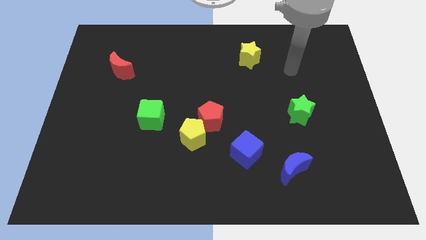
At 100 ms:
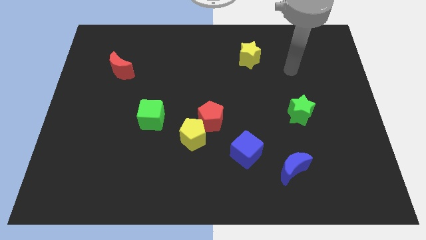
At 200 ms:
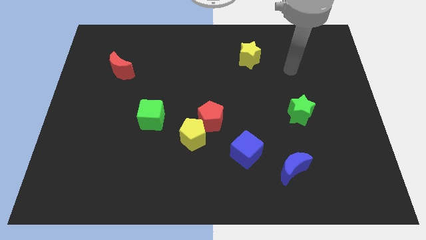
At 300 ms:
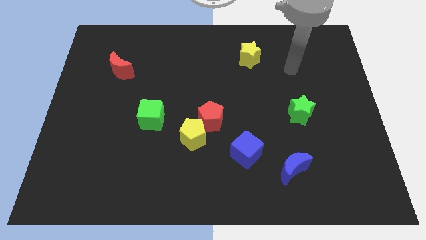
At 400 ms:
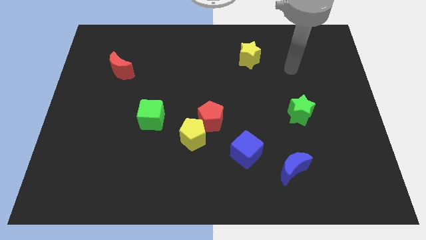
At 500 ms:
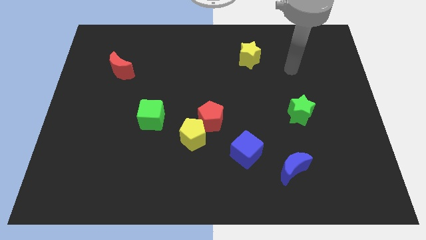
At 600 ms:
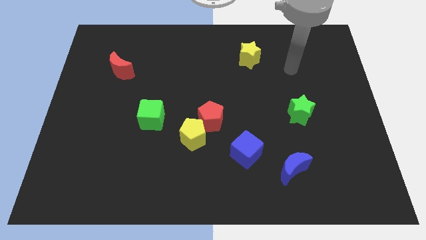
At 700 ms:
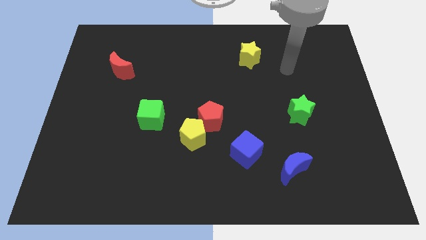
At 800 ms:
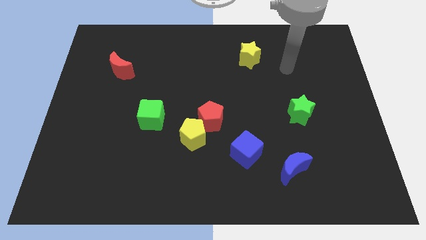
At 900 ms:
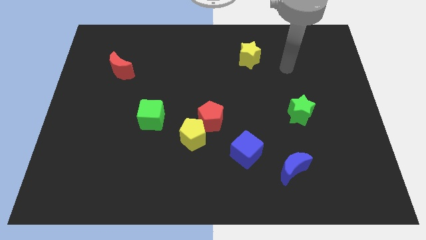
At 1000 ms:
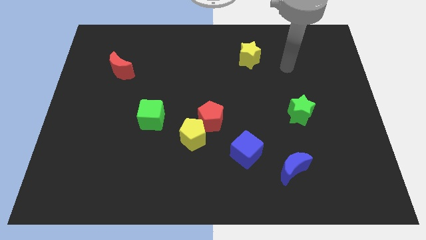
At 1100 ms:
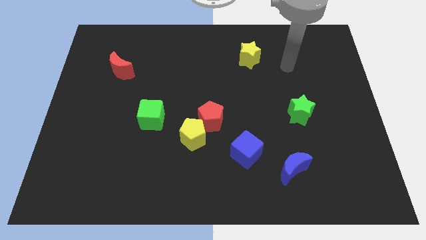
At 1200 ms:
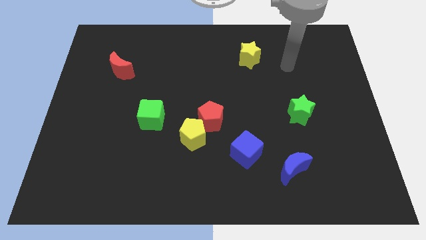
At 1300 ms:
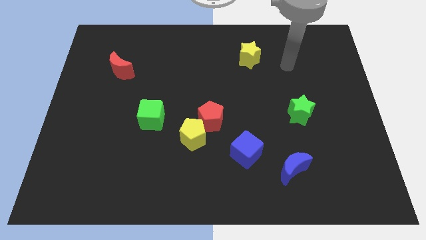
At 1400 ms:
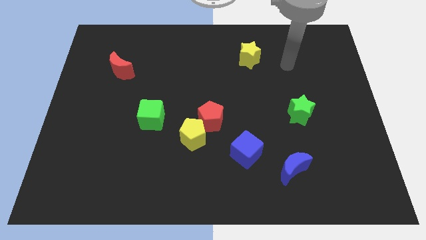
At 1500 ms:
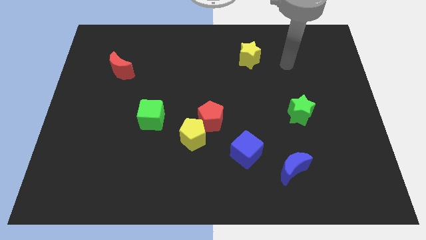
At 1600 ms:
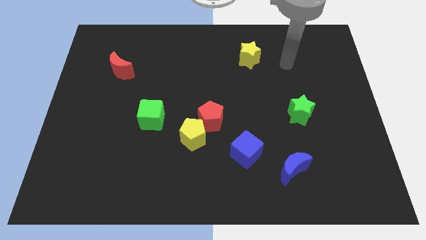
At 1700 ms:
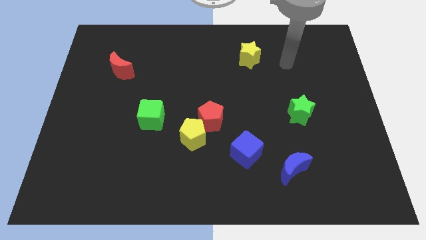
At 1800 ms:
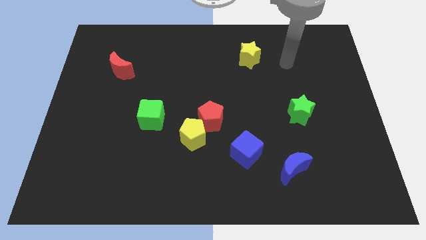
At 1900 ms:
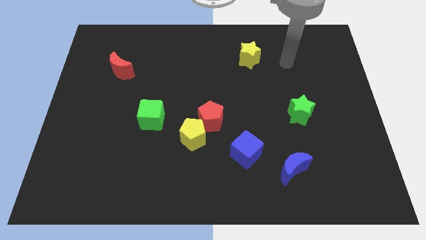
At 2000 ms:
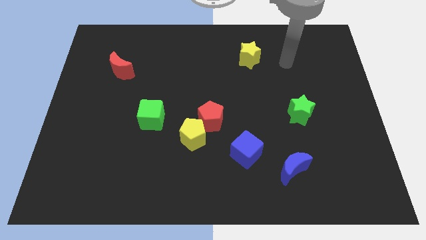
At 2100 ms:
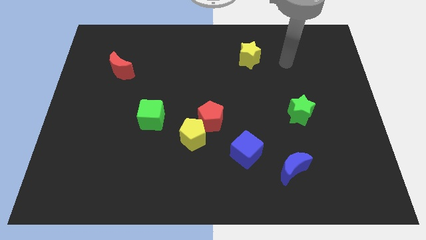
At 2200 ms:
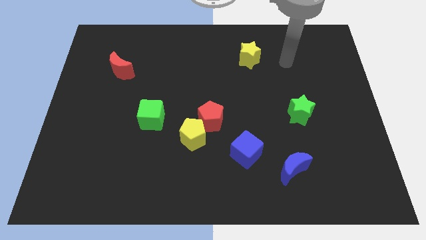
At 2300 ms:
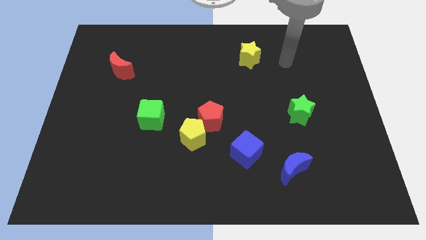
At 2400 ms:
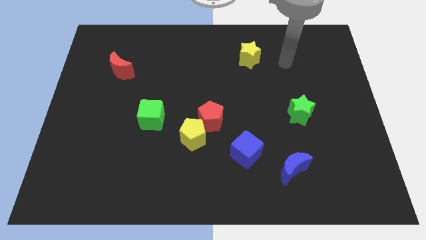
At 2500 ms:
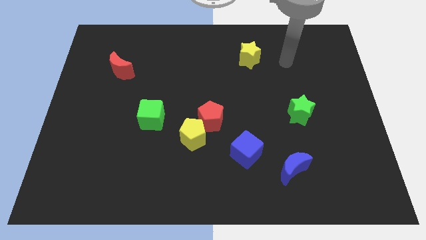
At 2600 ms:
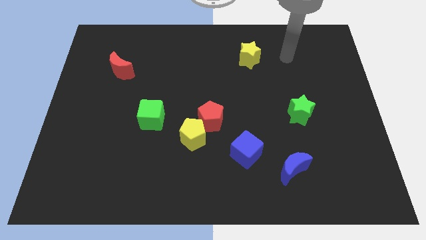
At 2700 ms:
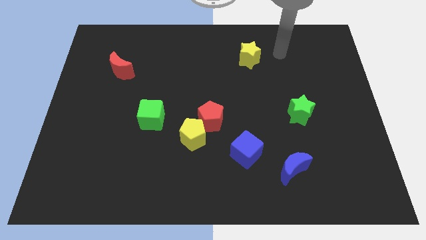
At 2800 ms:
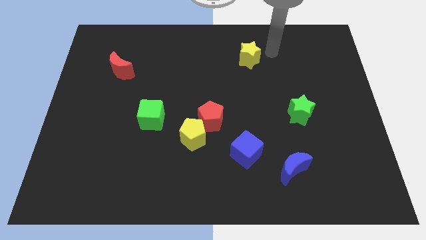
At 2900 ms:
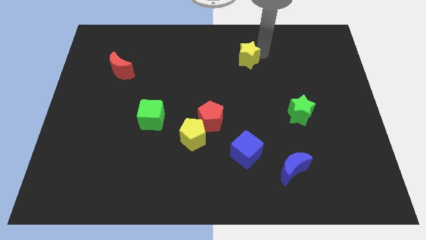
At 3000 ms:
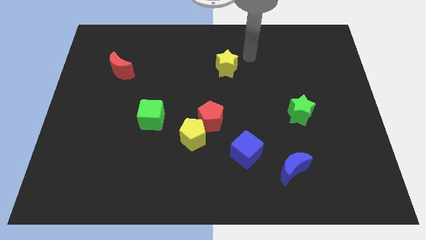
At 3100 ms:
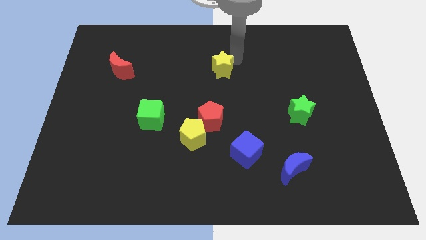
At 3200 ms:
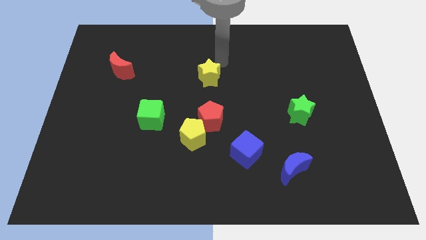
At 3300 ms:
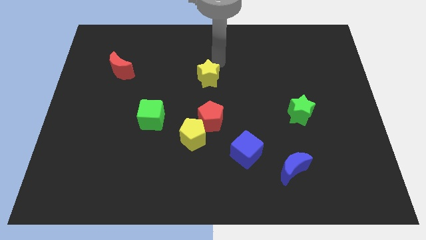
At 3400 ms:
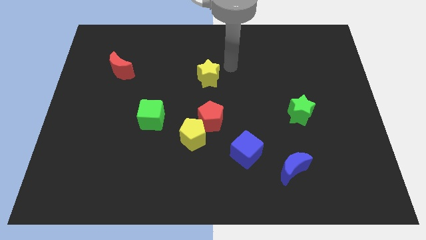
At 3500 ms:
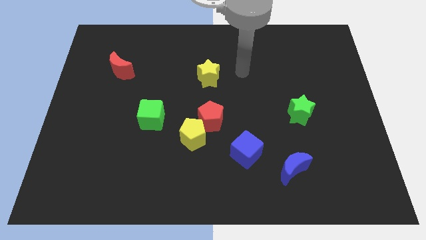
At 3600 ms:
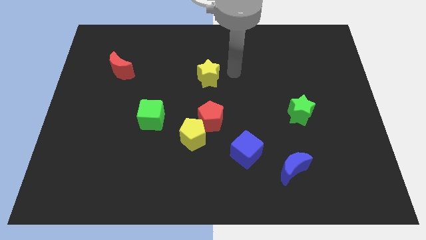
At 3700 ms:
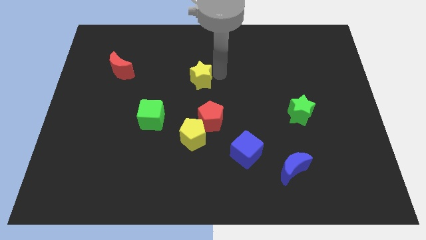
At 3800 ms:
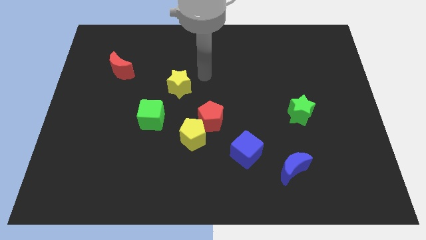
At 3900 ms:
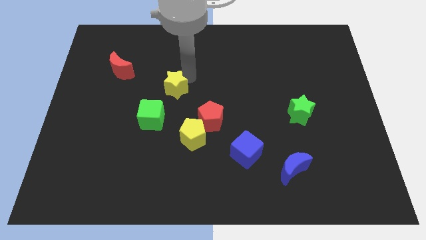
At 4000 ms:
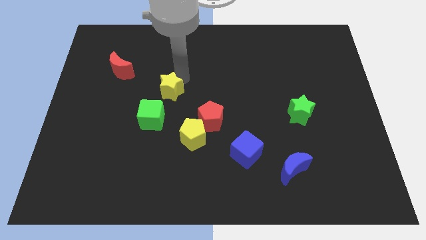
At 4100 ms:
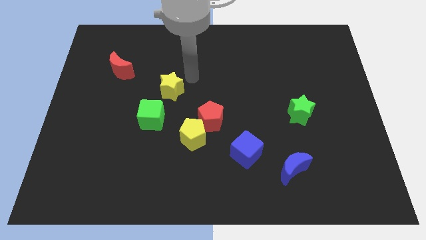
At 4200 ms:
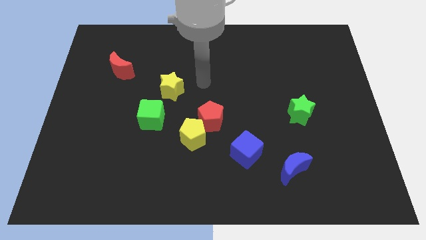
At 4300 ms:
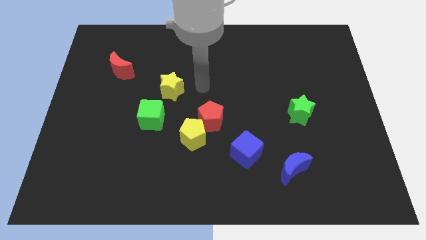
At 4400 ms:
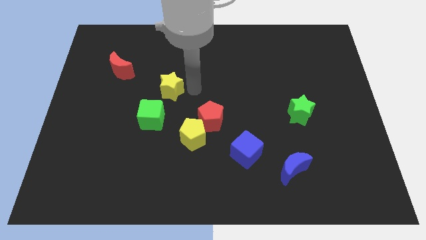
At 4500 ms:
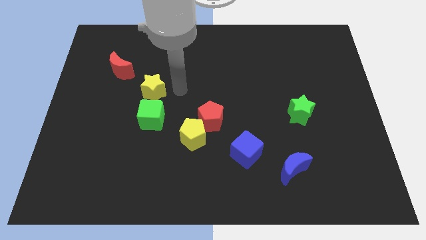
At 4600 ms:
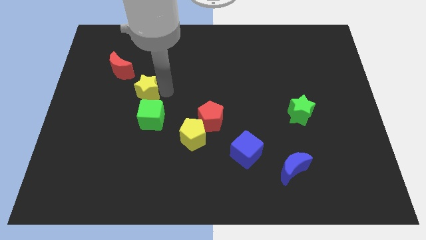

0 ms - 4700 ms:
put the yellow star above the green cube

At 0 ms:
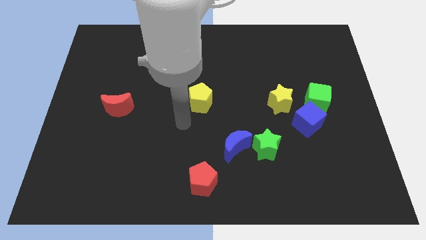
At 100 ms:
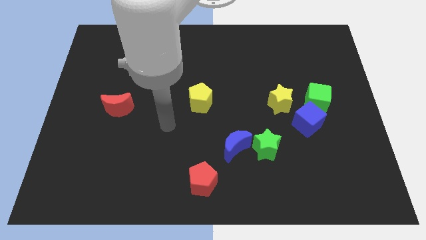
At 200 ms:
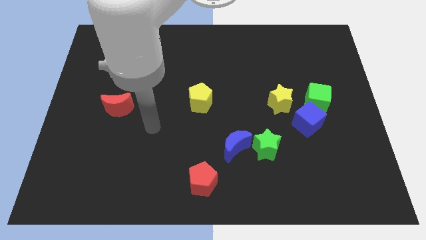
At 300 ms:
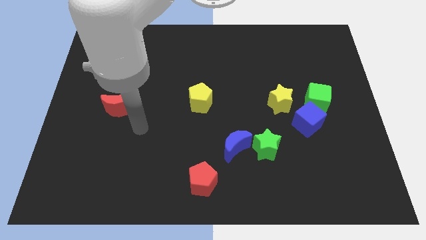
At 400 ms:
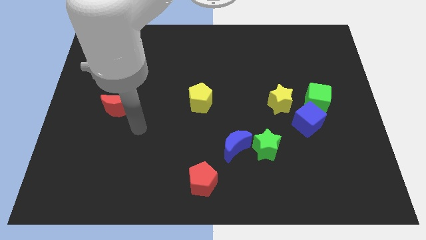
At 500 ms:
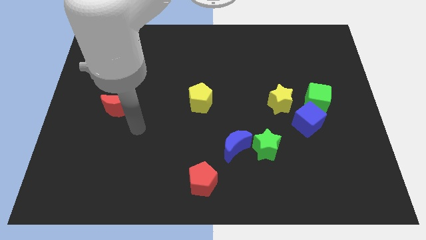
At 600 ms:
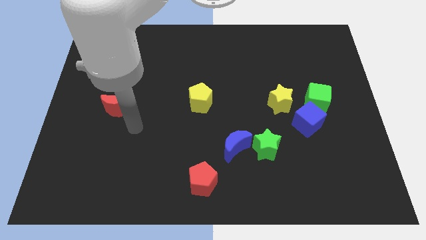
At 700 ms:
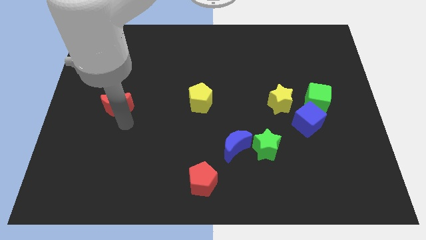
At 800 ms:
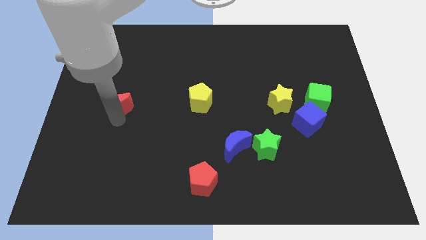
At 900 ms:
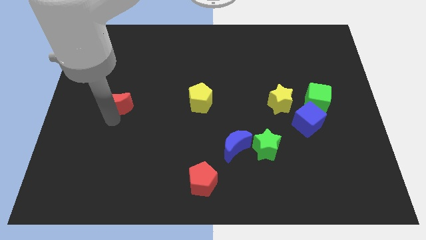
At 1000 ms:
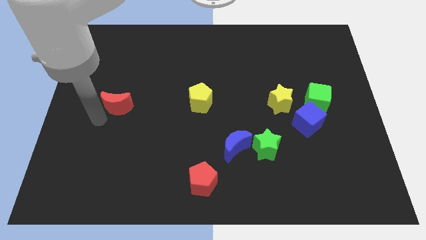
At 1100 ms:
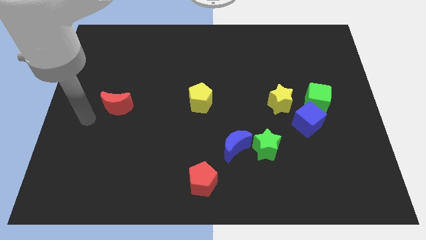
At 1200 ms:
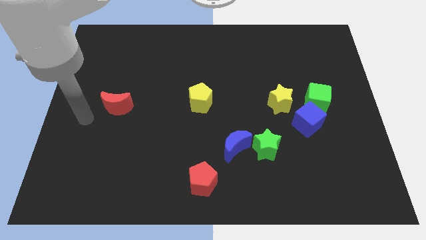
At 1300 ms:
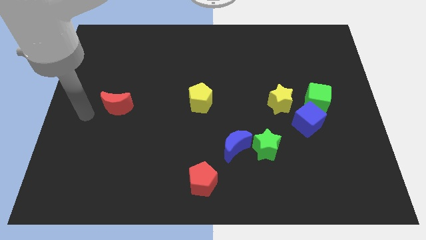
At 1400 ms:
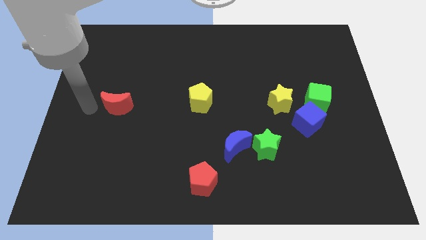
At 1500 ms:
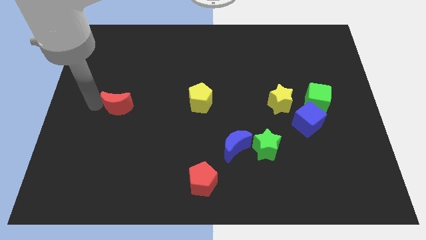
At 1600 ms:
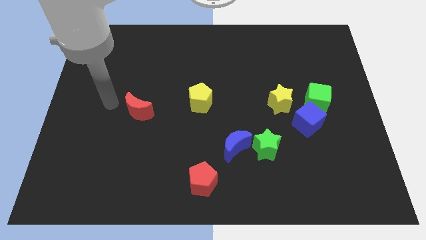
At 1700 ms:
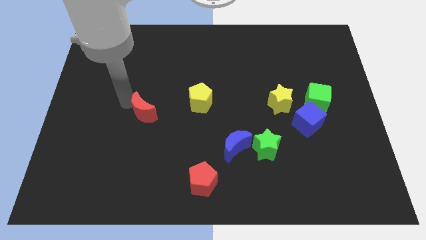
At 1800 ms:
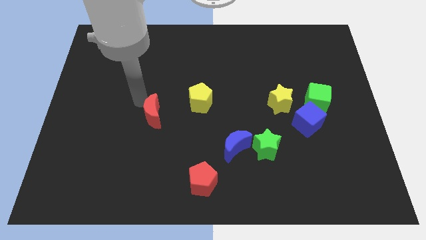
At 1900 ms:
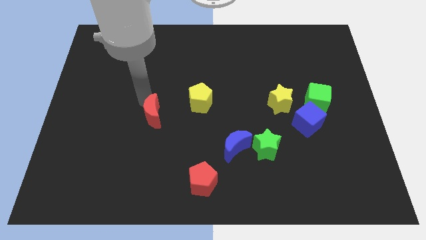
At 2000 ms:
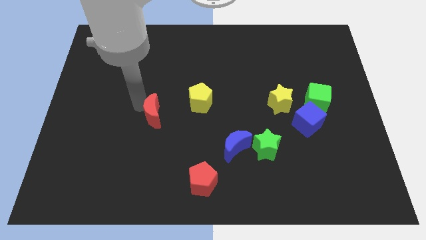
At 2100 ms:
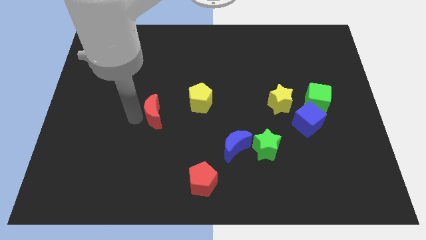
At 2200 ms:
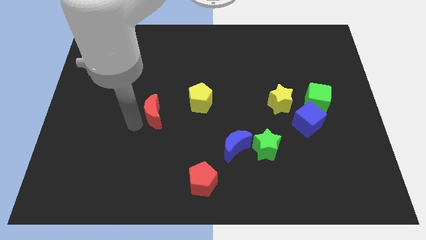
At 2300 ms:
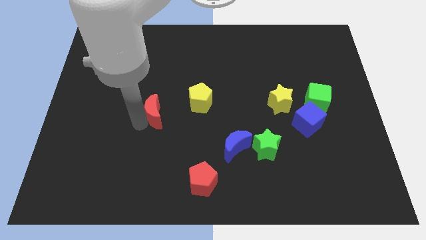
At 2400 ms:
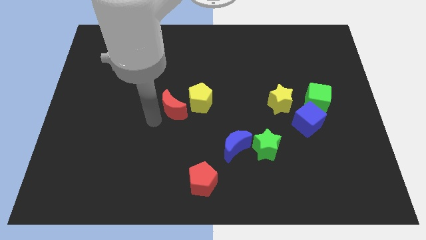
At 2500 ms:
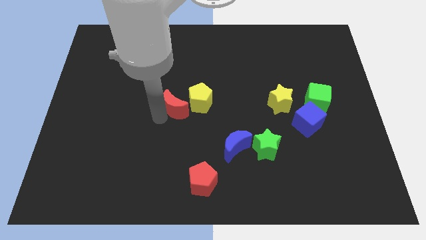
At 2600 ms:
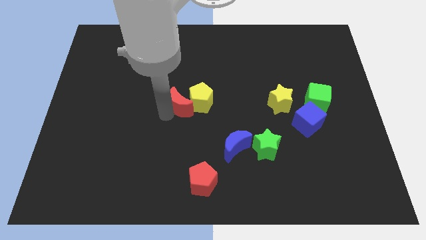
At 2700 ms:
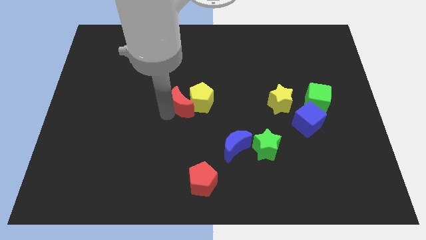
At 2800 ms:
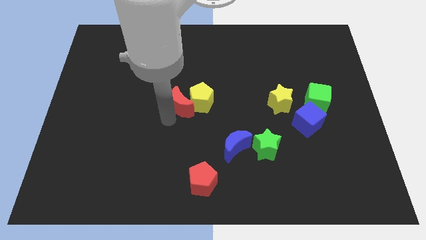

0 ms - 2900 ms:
move the red crescent into the yellow pentagon

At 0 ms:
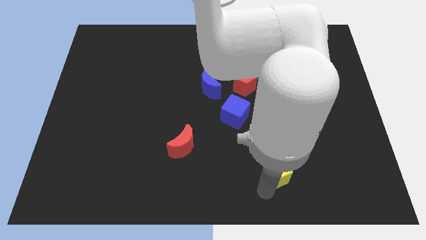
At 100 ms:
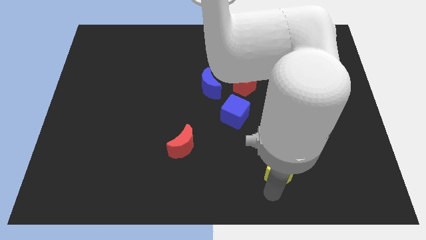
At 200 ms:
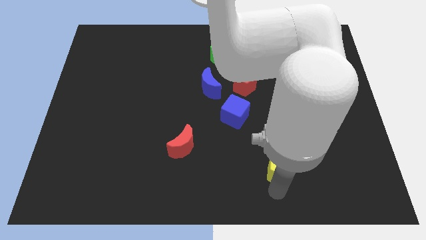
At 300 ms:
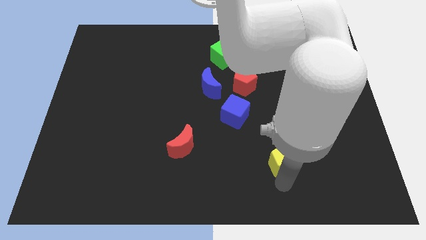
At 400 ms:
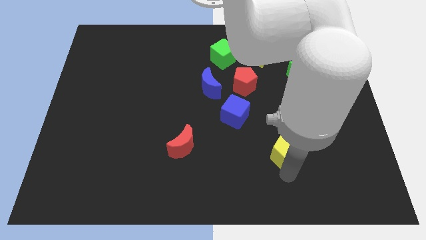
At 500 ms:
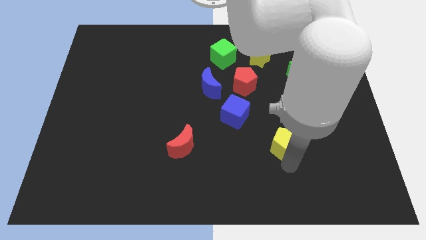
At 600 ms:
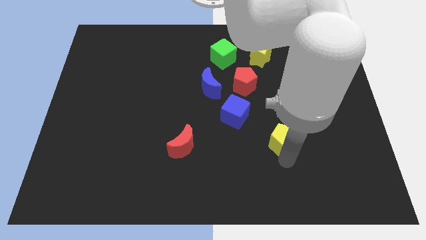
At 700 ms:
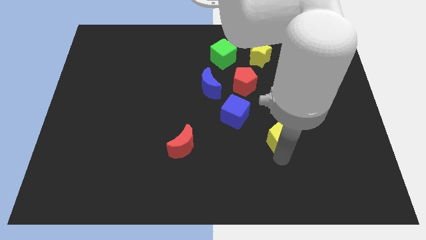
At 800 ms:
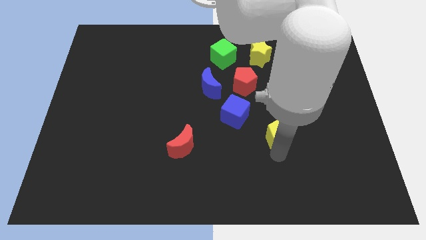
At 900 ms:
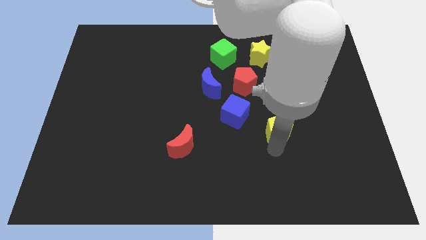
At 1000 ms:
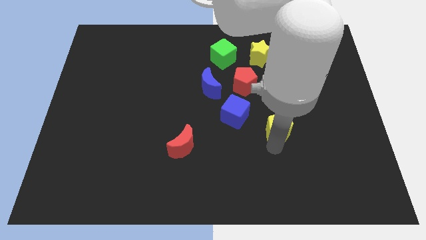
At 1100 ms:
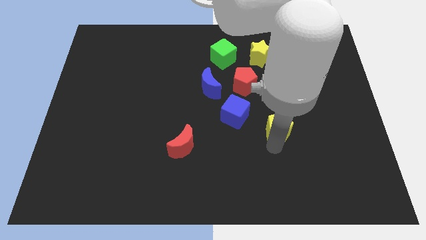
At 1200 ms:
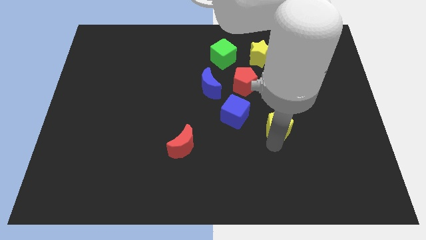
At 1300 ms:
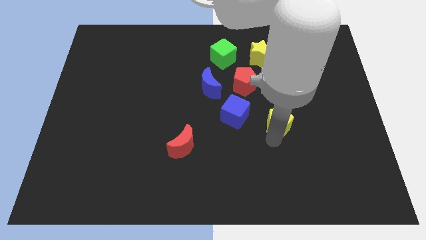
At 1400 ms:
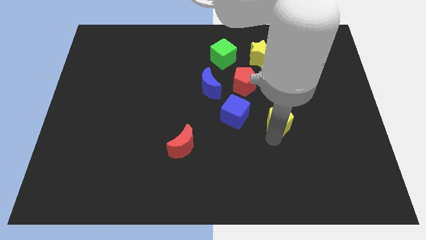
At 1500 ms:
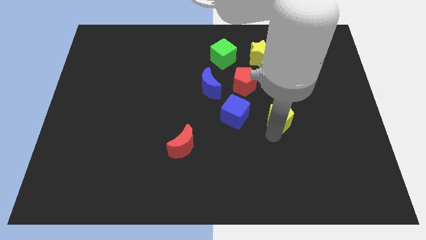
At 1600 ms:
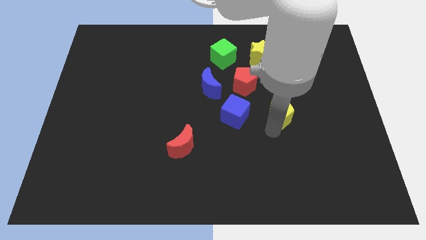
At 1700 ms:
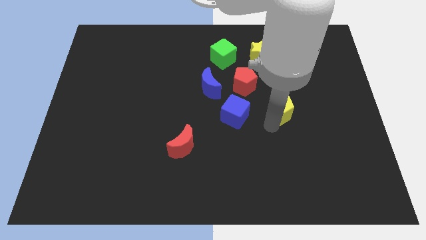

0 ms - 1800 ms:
place the yellow pentagon parallel to blue cube
